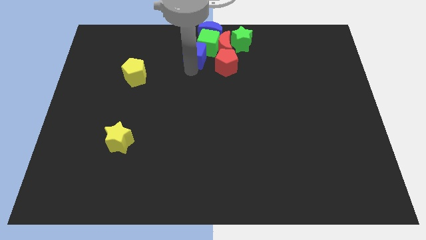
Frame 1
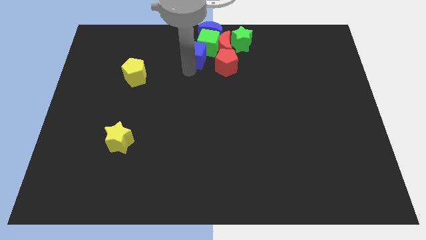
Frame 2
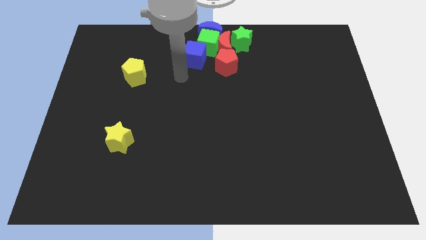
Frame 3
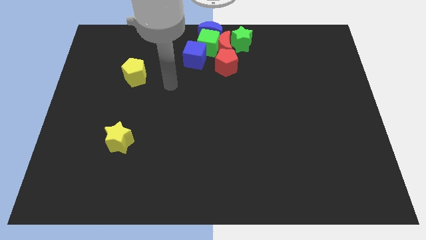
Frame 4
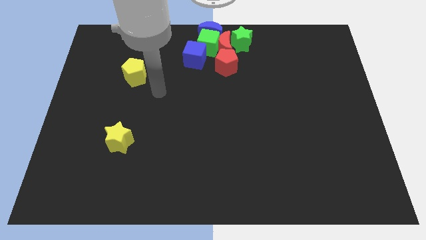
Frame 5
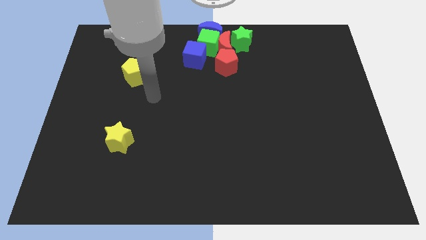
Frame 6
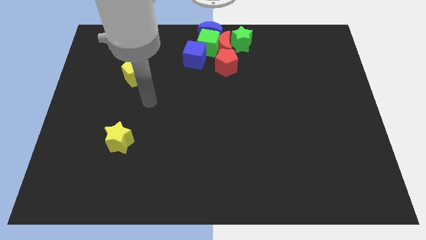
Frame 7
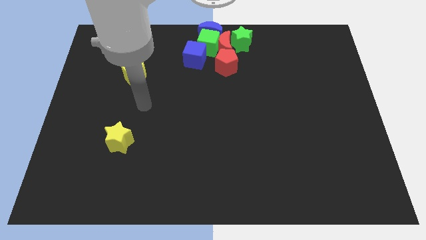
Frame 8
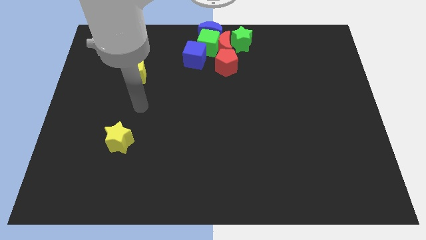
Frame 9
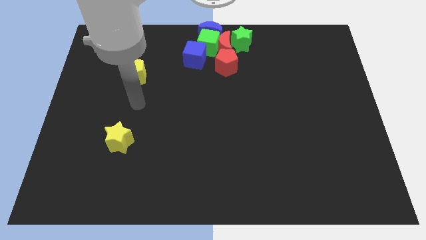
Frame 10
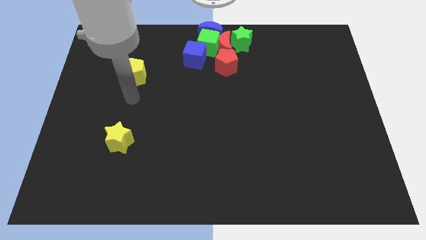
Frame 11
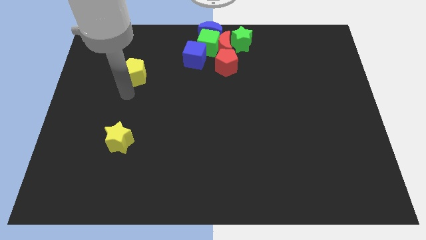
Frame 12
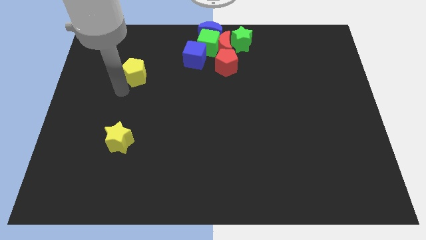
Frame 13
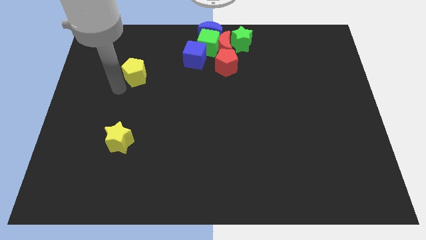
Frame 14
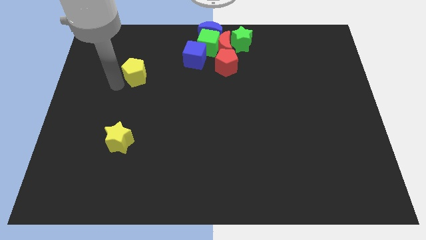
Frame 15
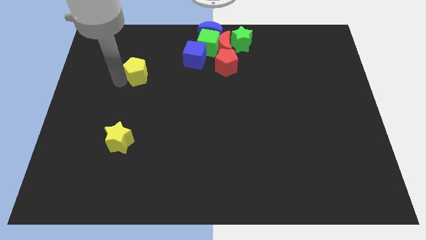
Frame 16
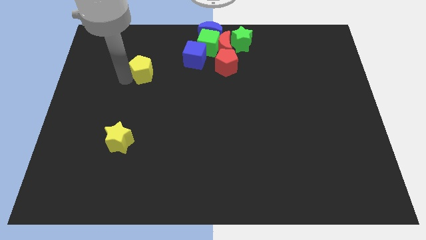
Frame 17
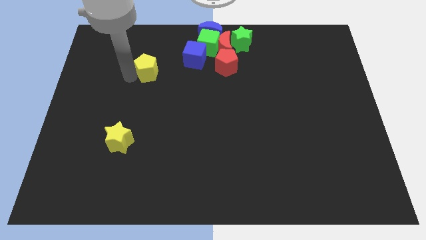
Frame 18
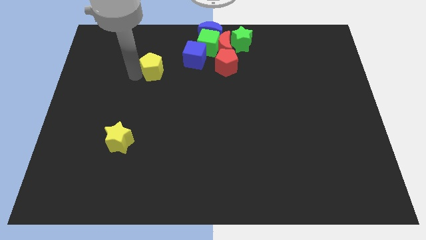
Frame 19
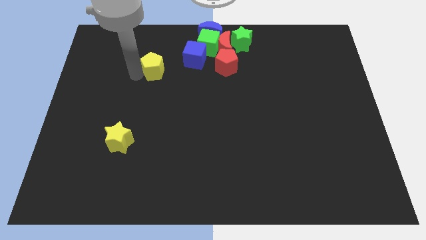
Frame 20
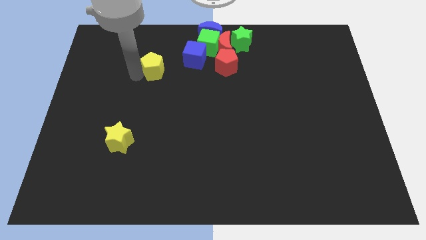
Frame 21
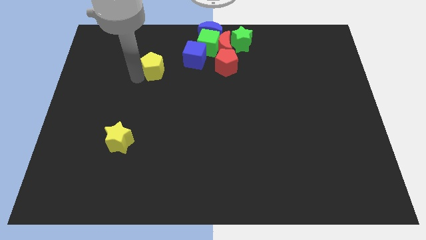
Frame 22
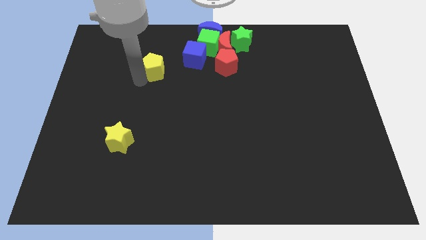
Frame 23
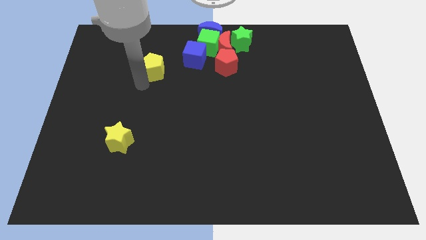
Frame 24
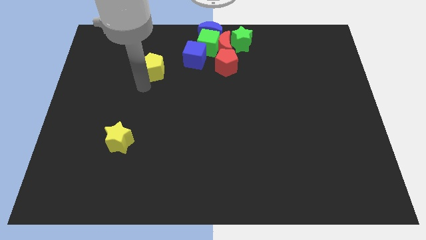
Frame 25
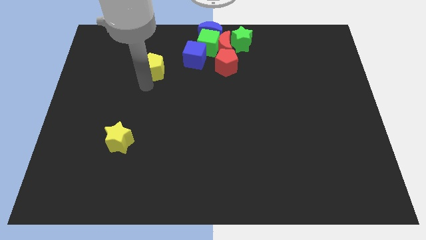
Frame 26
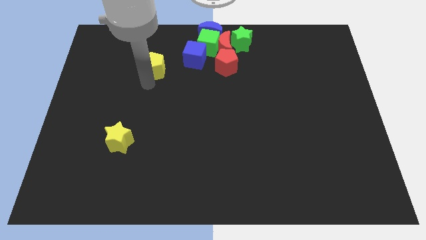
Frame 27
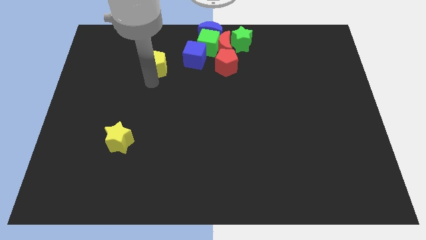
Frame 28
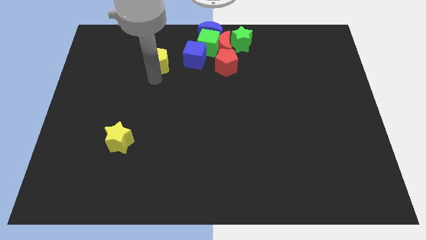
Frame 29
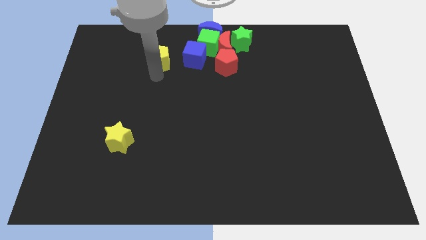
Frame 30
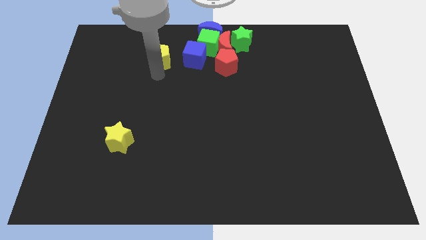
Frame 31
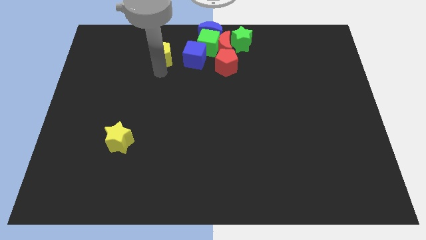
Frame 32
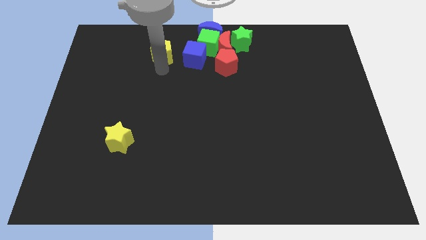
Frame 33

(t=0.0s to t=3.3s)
move the yellow pentagon to the left side of the blue cube

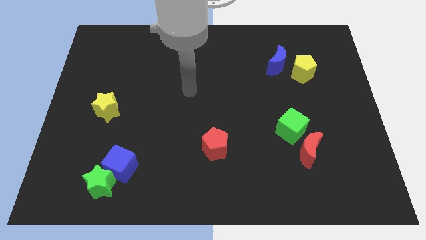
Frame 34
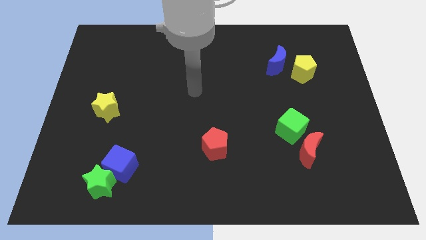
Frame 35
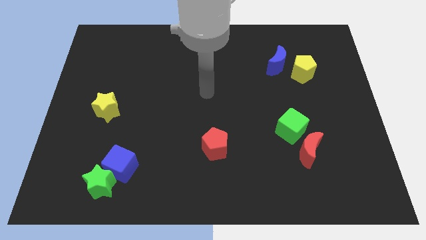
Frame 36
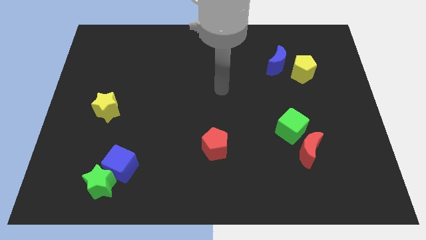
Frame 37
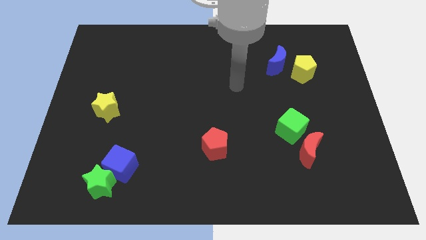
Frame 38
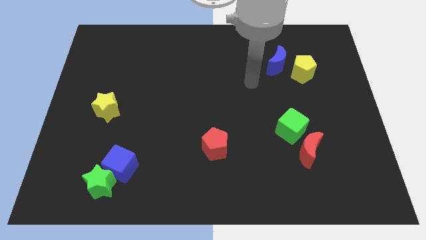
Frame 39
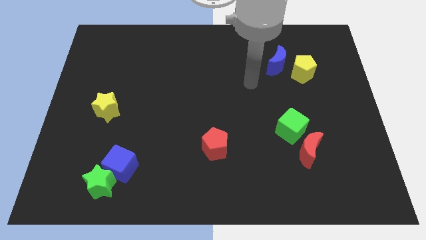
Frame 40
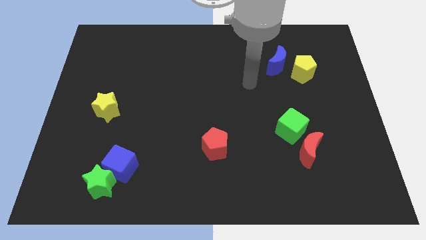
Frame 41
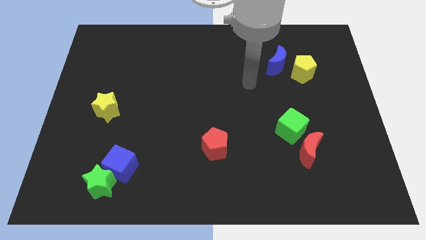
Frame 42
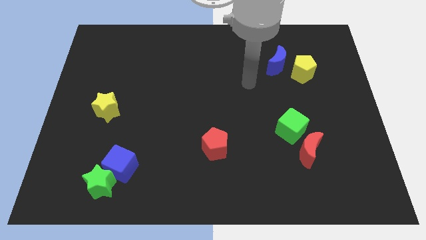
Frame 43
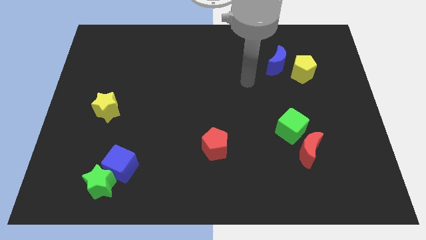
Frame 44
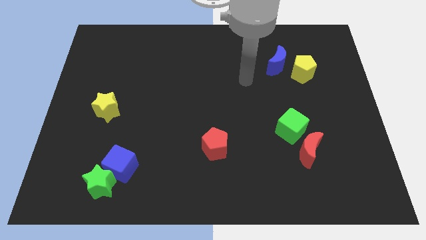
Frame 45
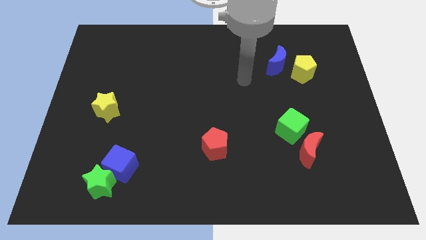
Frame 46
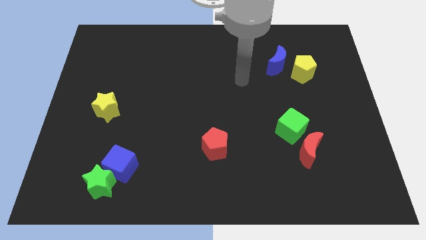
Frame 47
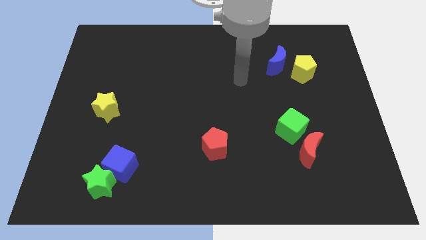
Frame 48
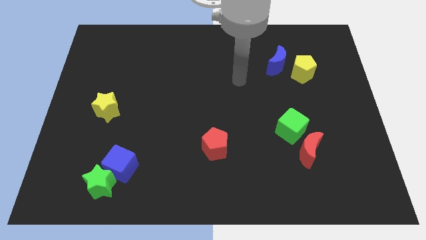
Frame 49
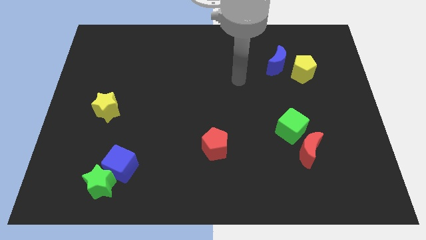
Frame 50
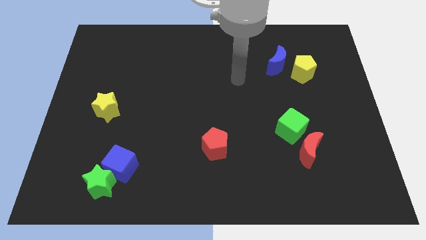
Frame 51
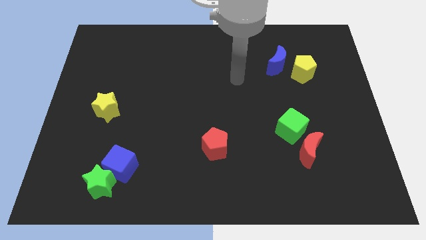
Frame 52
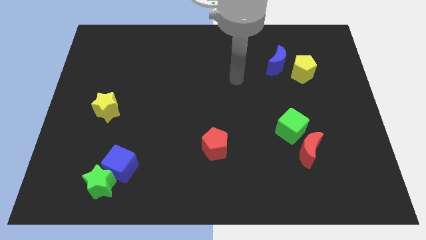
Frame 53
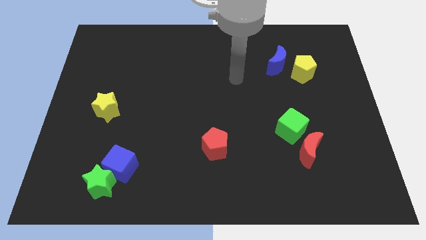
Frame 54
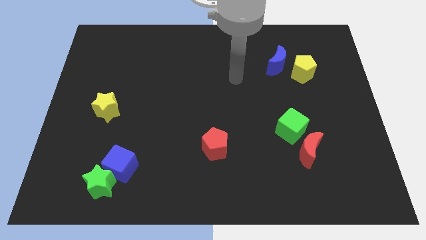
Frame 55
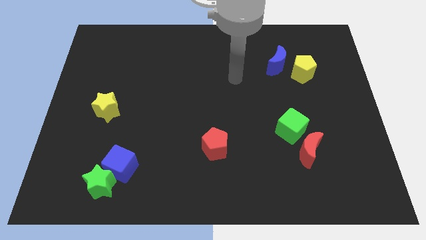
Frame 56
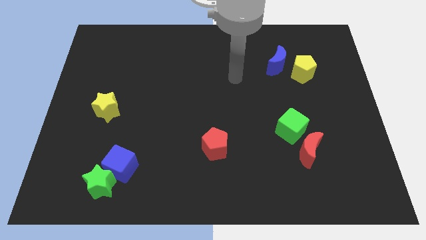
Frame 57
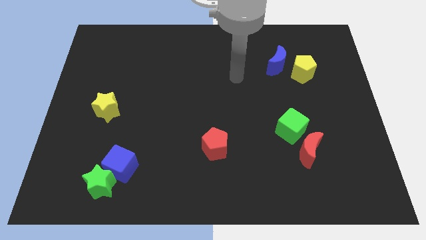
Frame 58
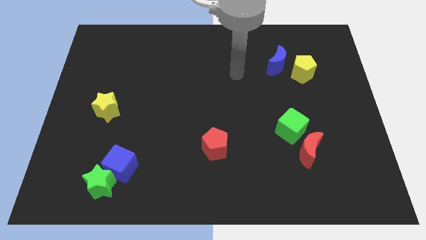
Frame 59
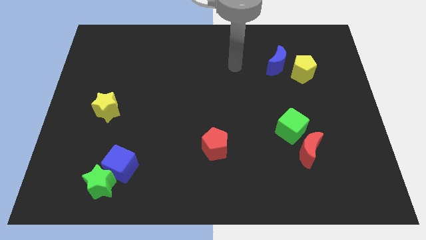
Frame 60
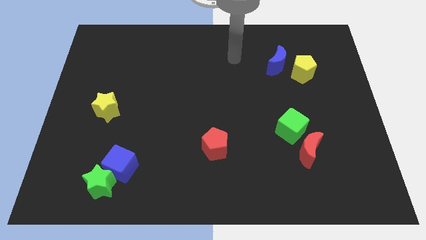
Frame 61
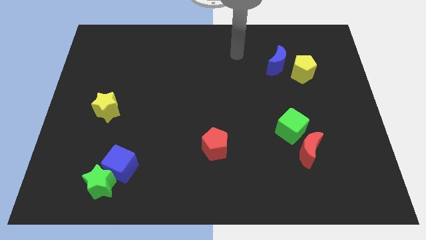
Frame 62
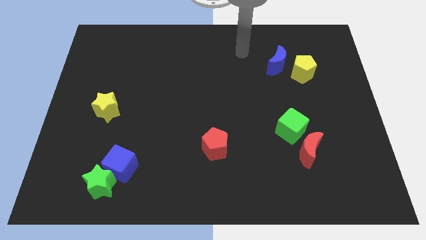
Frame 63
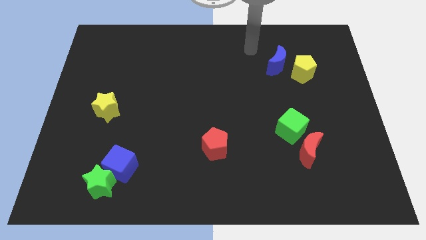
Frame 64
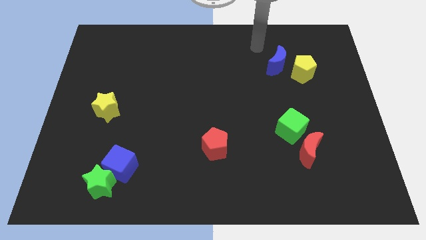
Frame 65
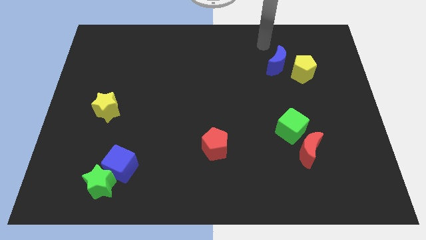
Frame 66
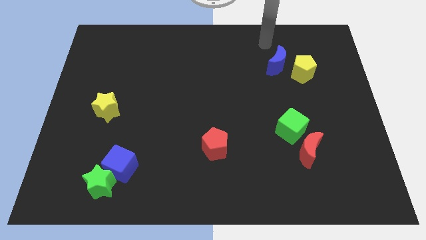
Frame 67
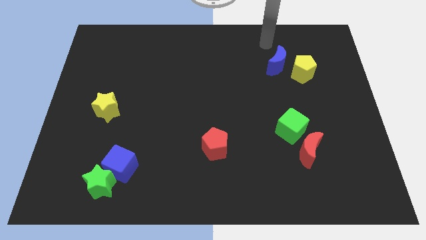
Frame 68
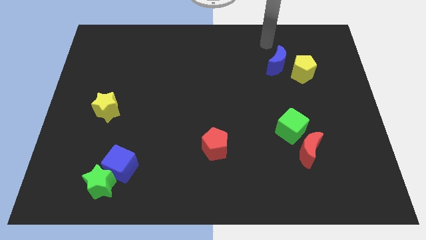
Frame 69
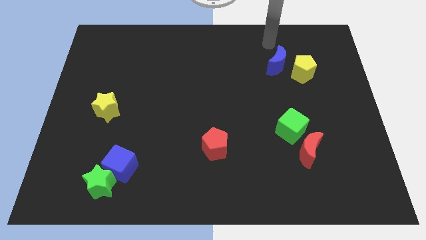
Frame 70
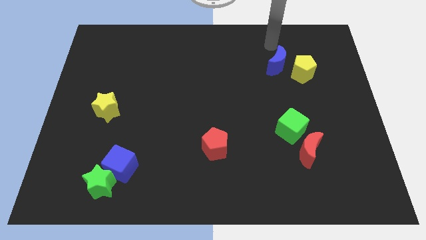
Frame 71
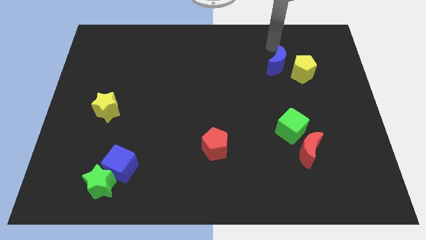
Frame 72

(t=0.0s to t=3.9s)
move the arm to the blue moon

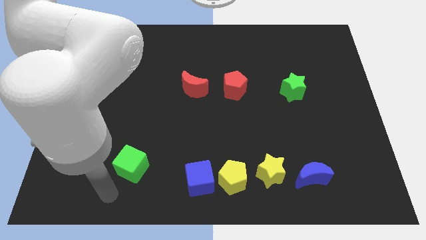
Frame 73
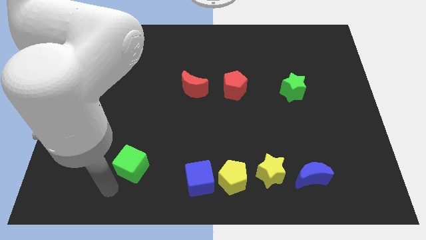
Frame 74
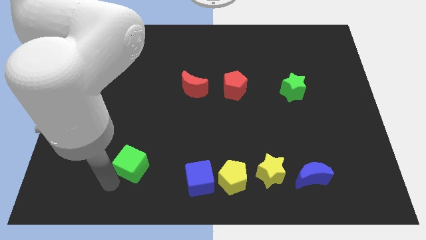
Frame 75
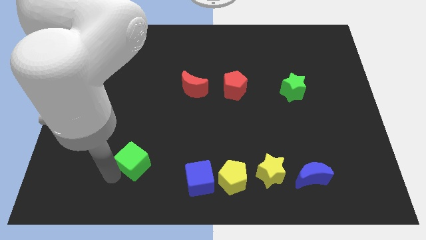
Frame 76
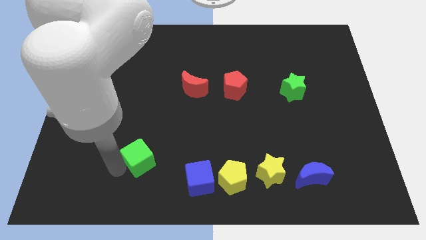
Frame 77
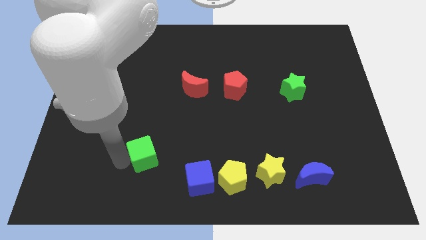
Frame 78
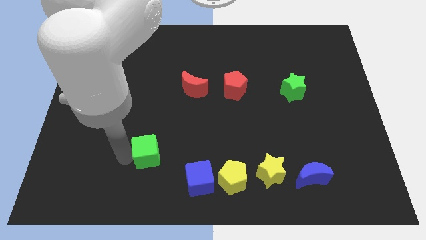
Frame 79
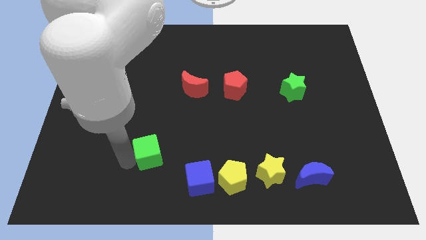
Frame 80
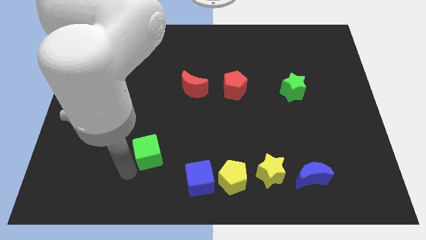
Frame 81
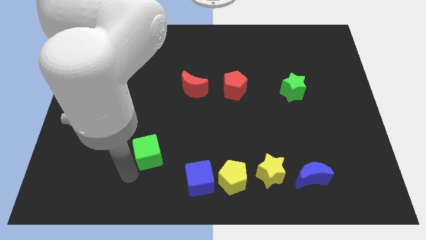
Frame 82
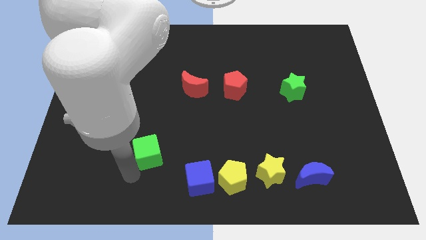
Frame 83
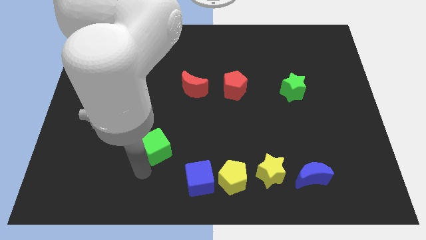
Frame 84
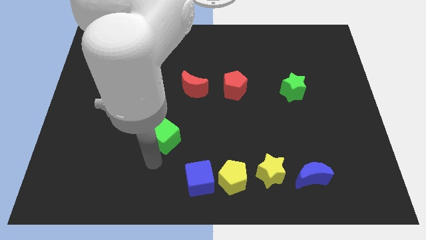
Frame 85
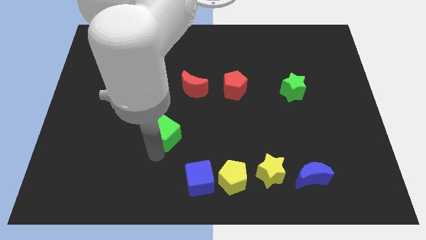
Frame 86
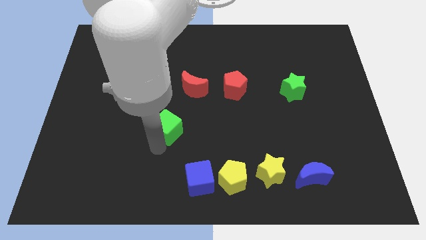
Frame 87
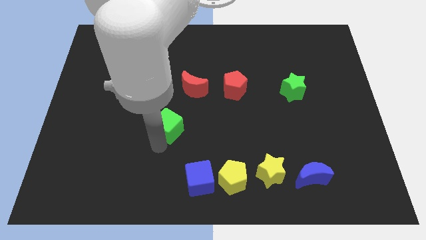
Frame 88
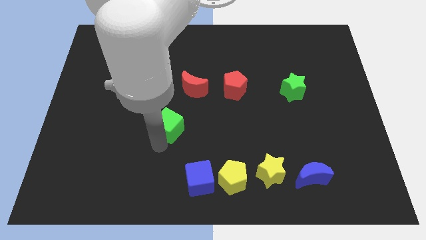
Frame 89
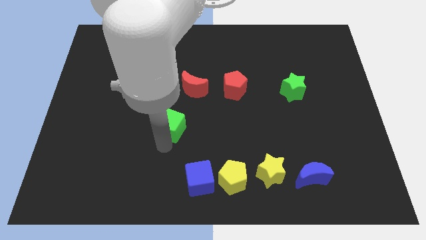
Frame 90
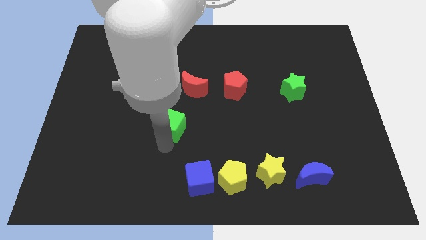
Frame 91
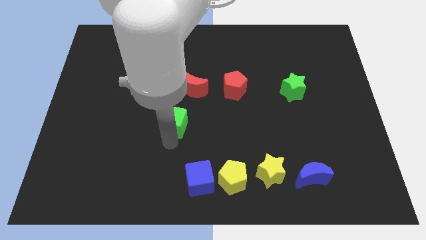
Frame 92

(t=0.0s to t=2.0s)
place the green cube below the red moon
